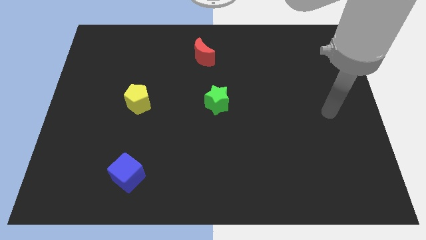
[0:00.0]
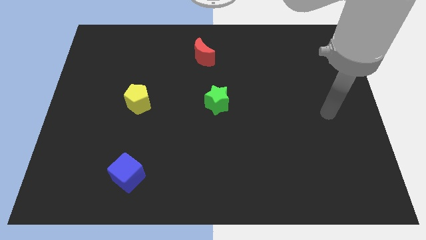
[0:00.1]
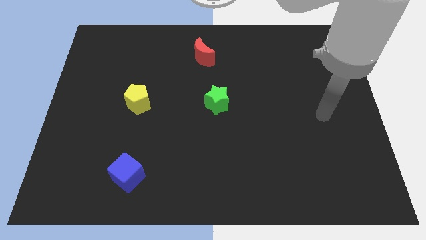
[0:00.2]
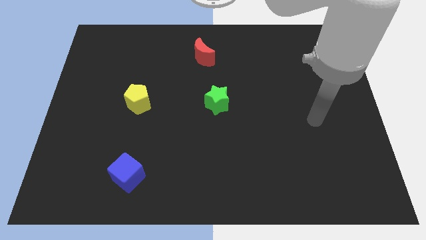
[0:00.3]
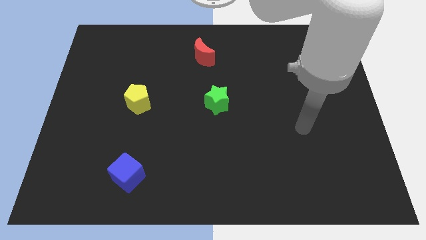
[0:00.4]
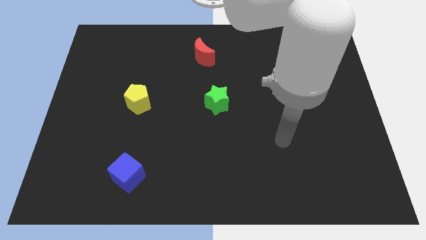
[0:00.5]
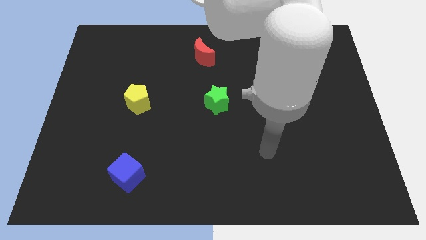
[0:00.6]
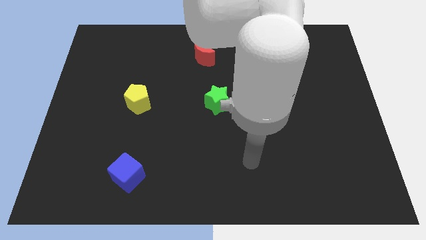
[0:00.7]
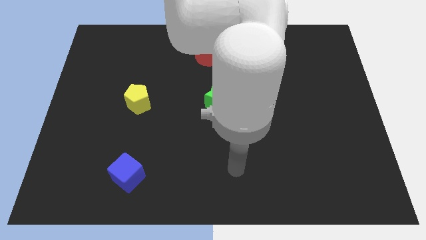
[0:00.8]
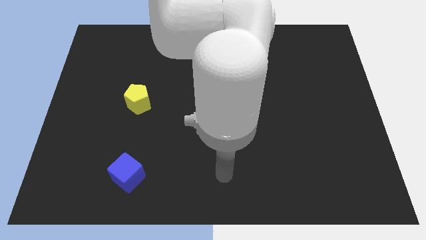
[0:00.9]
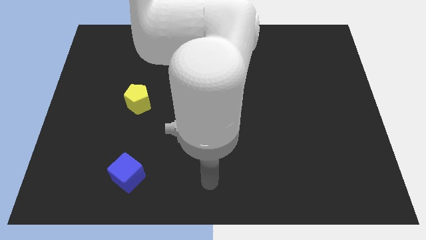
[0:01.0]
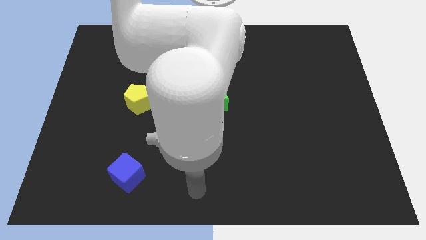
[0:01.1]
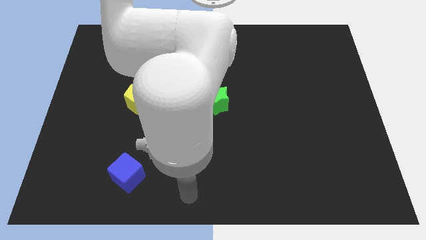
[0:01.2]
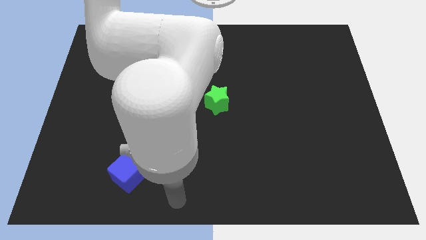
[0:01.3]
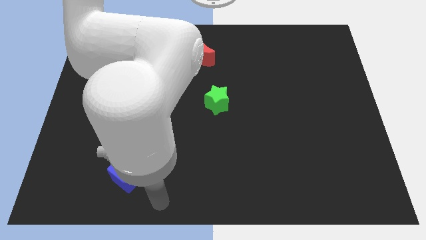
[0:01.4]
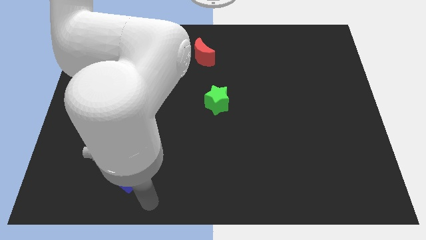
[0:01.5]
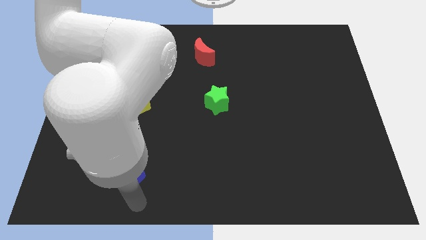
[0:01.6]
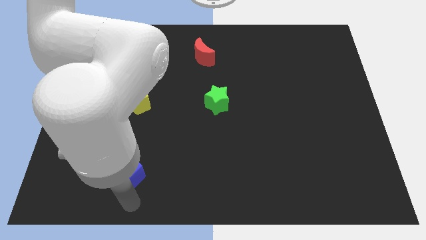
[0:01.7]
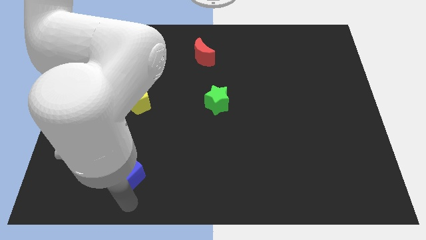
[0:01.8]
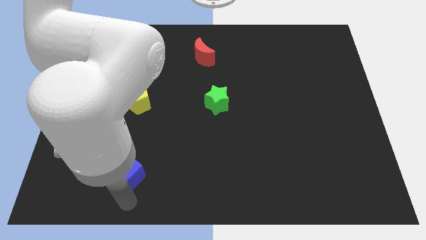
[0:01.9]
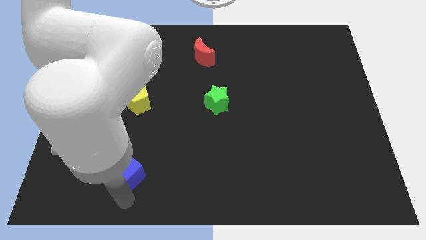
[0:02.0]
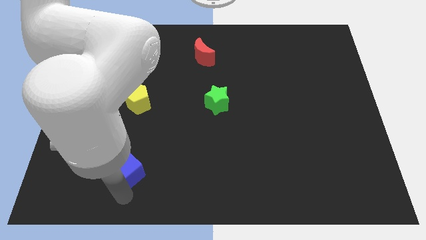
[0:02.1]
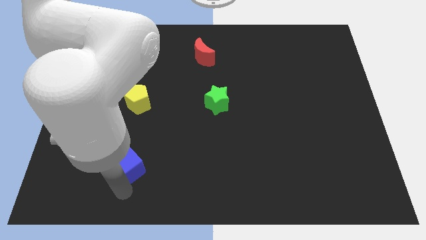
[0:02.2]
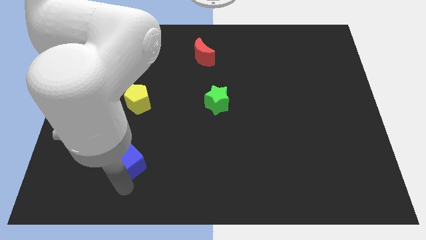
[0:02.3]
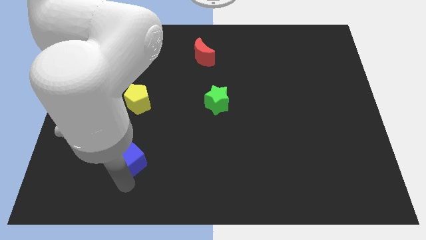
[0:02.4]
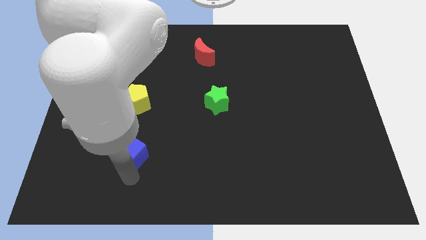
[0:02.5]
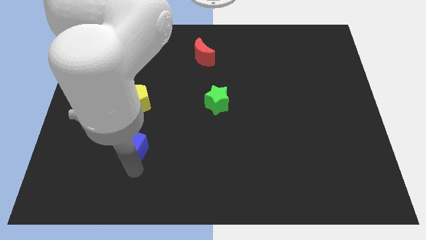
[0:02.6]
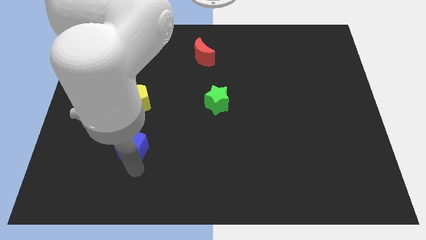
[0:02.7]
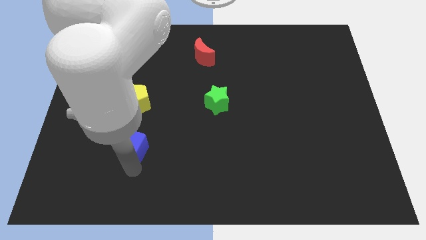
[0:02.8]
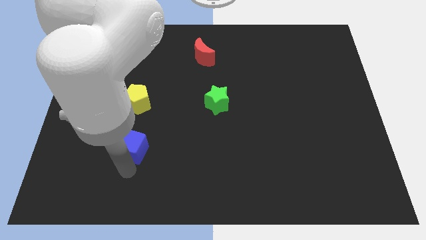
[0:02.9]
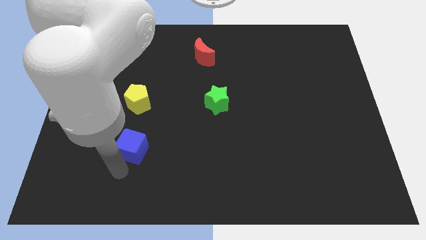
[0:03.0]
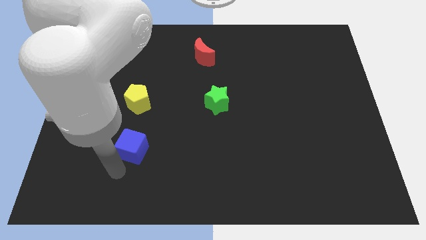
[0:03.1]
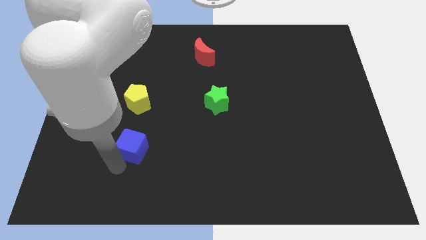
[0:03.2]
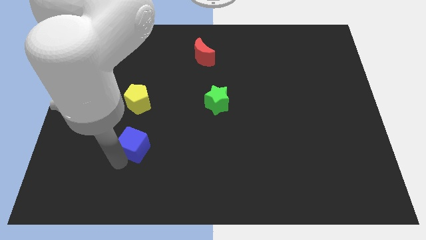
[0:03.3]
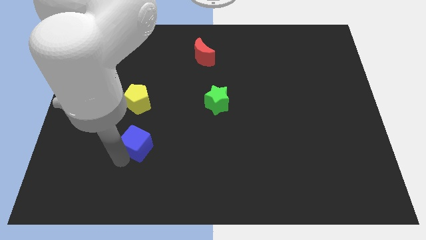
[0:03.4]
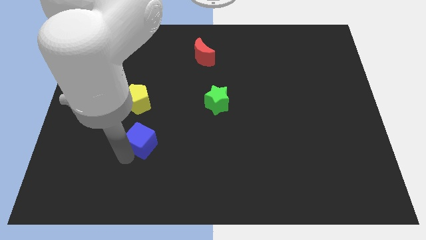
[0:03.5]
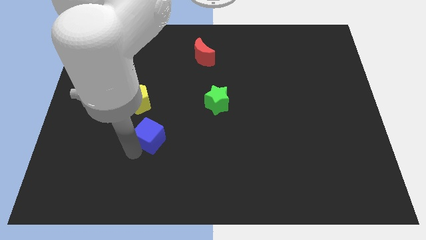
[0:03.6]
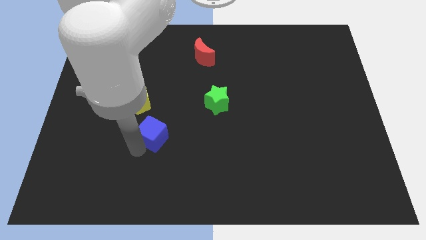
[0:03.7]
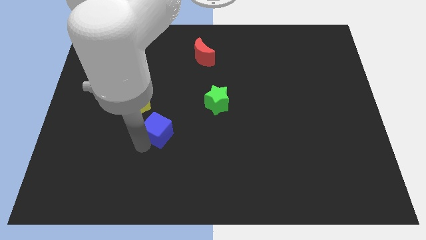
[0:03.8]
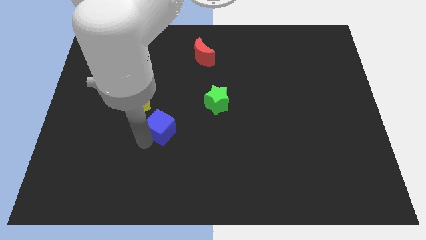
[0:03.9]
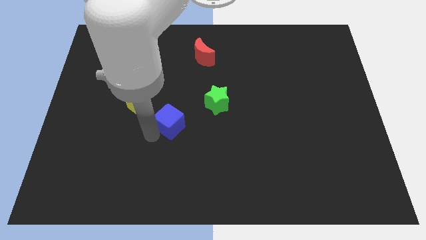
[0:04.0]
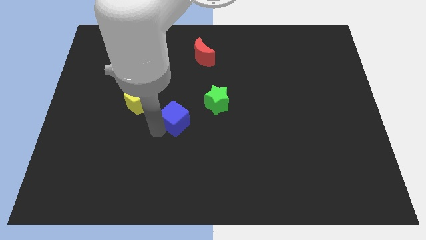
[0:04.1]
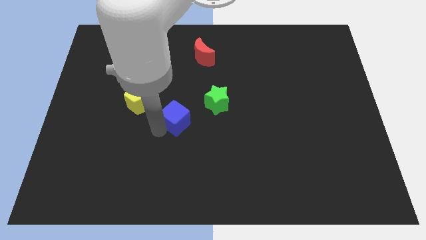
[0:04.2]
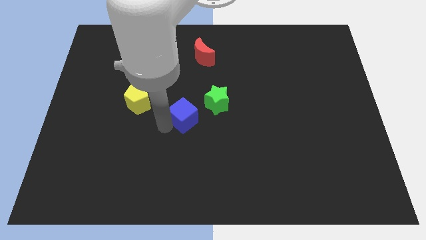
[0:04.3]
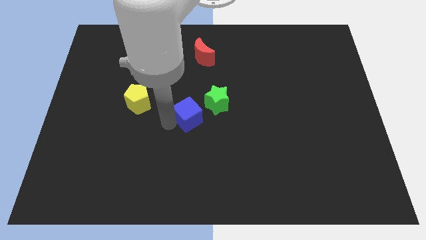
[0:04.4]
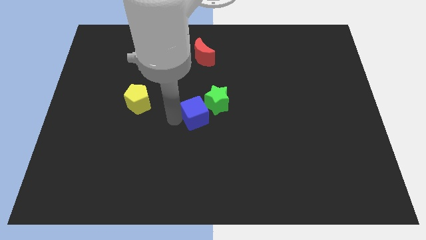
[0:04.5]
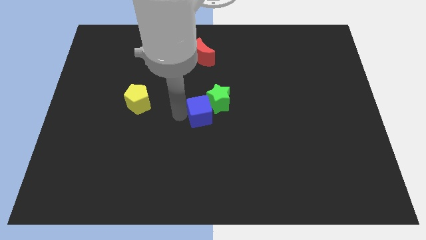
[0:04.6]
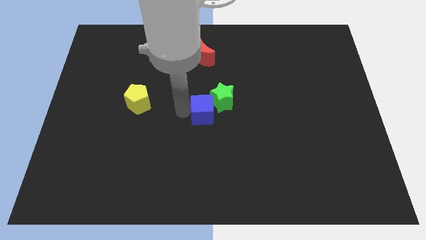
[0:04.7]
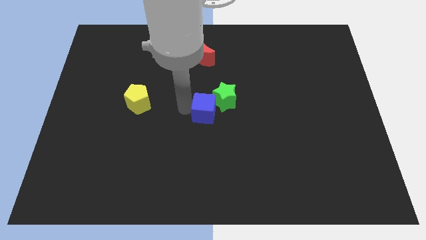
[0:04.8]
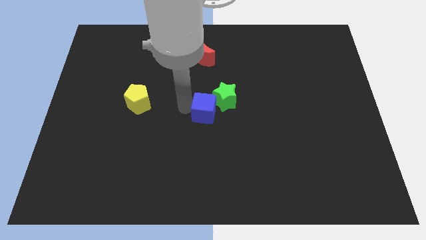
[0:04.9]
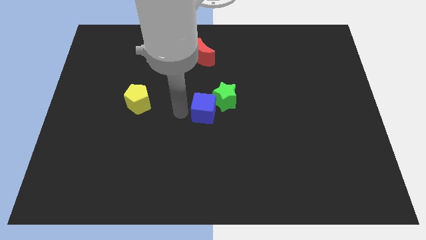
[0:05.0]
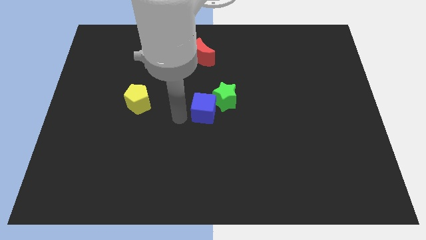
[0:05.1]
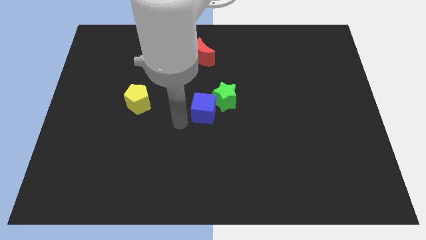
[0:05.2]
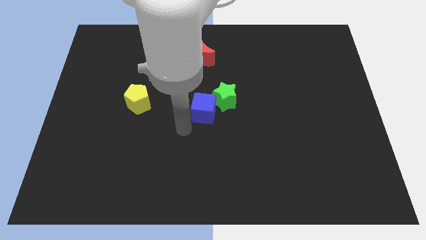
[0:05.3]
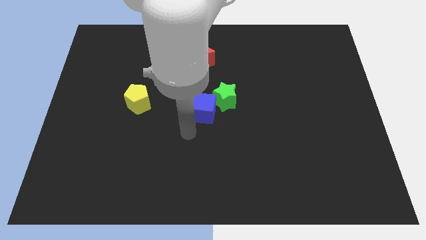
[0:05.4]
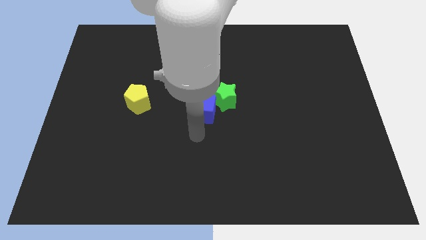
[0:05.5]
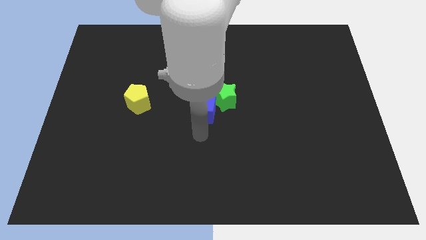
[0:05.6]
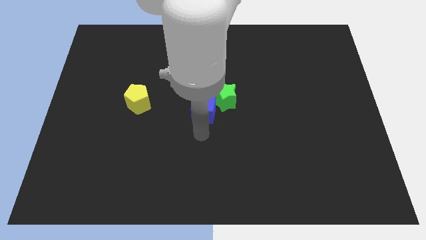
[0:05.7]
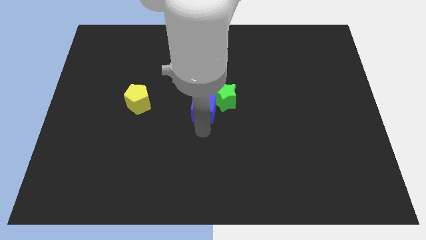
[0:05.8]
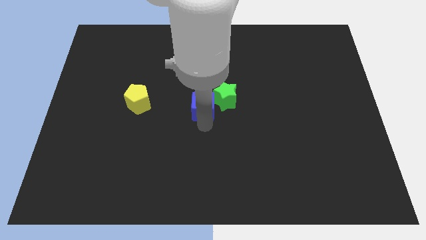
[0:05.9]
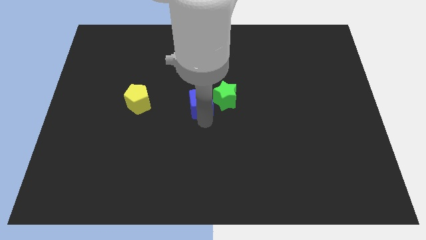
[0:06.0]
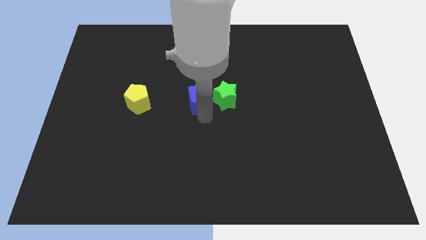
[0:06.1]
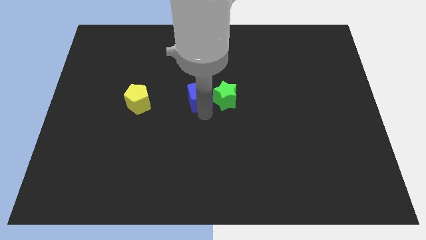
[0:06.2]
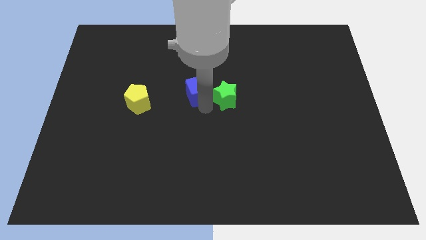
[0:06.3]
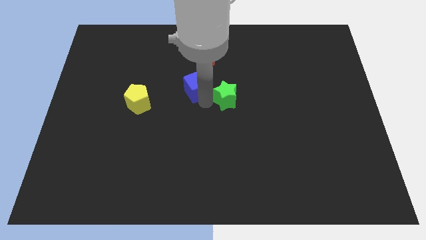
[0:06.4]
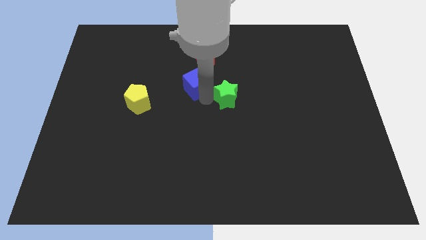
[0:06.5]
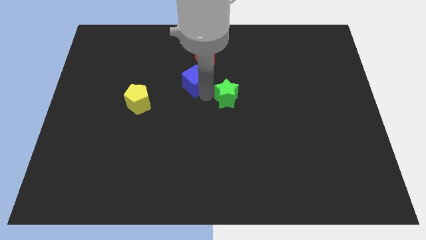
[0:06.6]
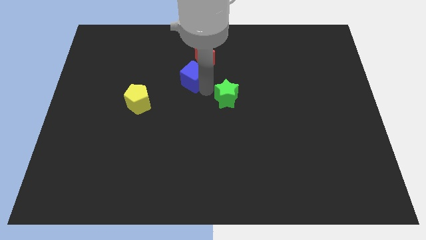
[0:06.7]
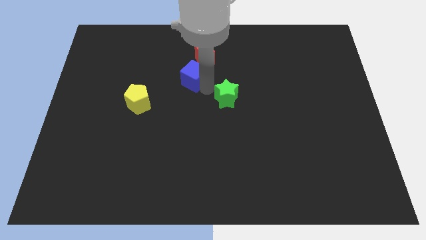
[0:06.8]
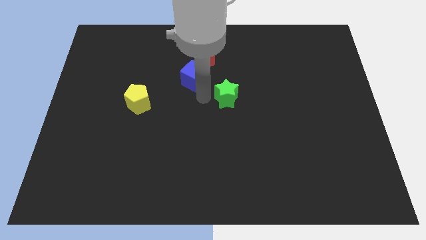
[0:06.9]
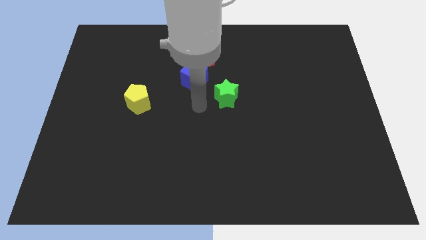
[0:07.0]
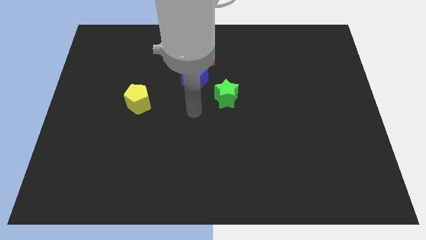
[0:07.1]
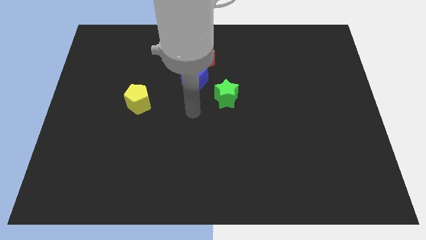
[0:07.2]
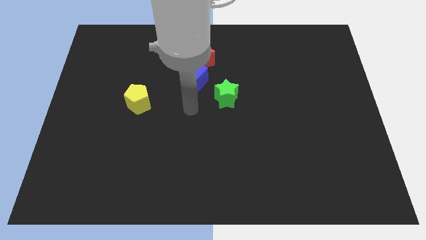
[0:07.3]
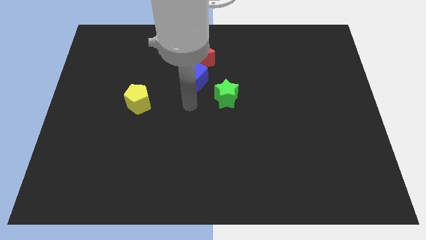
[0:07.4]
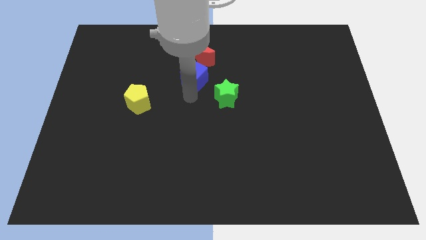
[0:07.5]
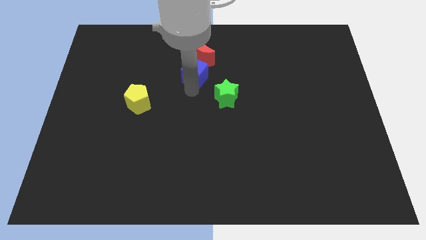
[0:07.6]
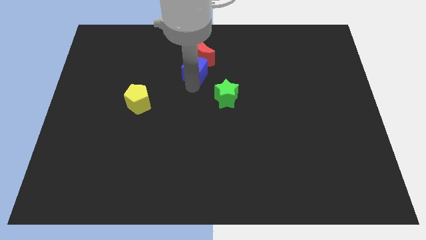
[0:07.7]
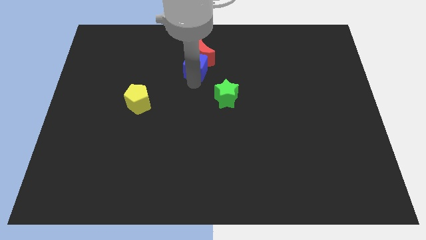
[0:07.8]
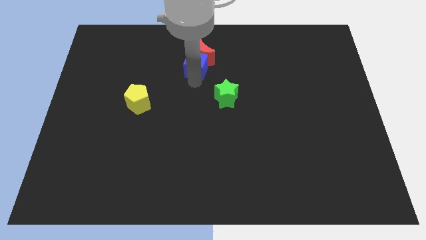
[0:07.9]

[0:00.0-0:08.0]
push the blue block close to the moon
